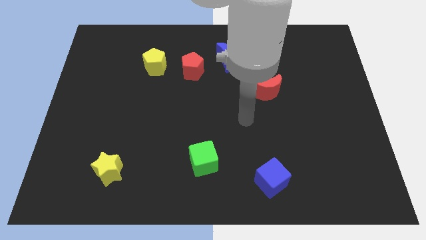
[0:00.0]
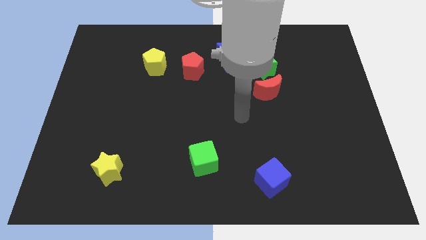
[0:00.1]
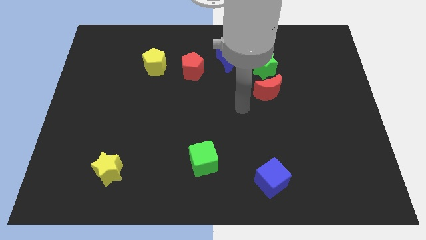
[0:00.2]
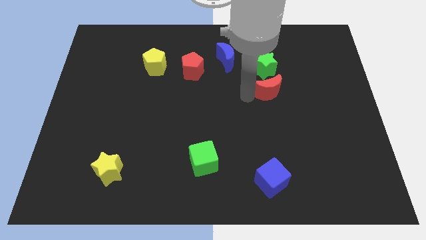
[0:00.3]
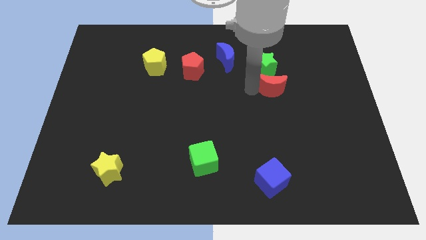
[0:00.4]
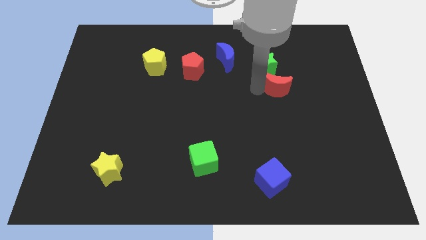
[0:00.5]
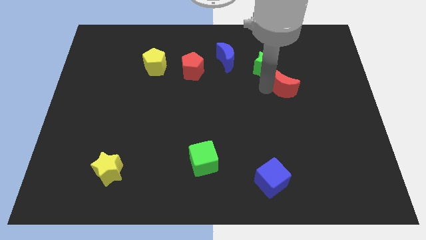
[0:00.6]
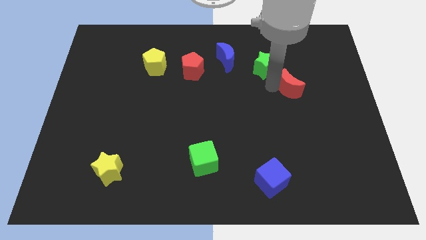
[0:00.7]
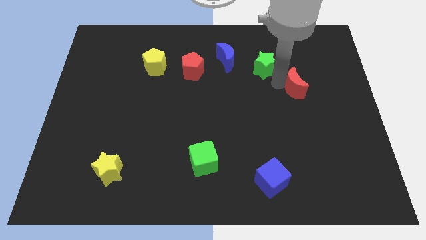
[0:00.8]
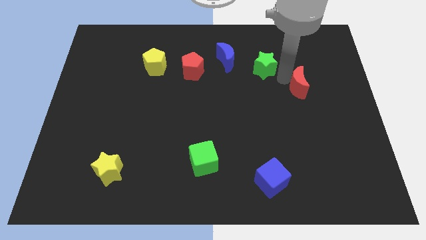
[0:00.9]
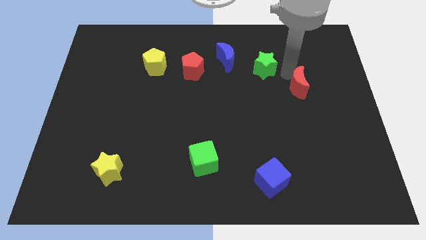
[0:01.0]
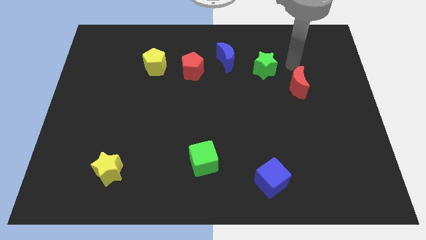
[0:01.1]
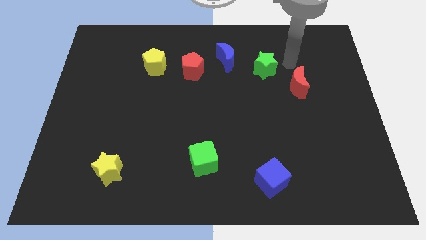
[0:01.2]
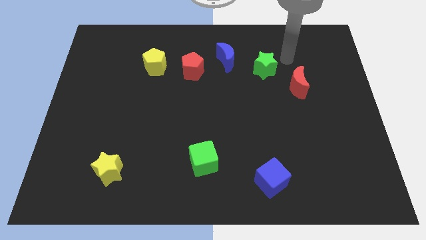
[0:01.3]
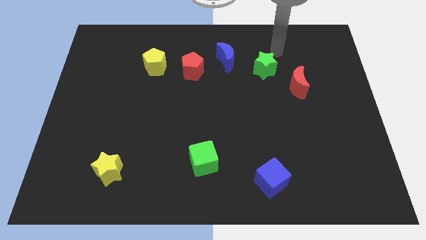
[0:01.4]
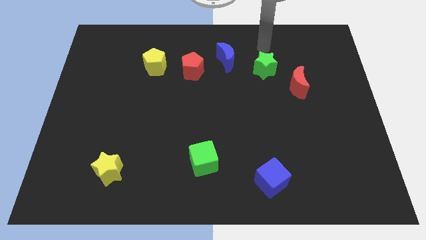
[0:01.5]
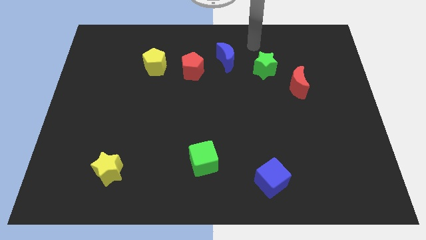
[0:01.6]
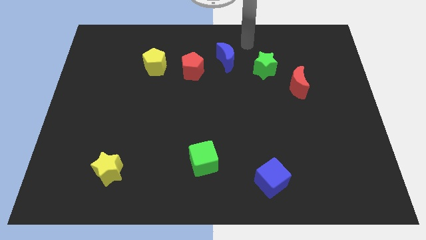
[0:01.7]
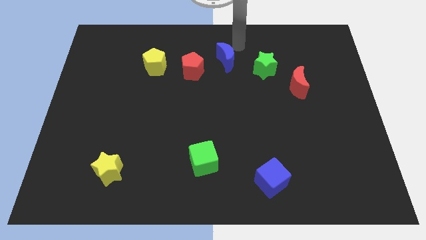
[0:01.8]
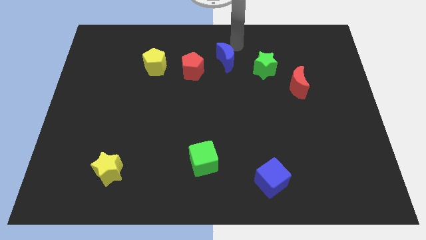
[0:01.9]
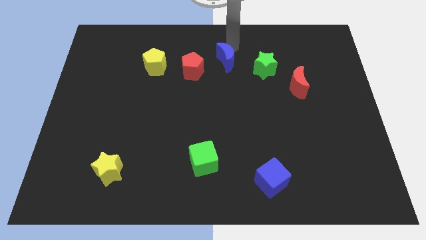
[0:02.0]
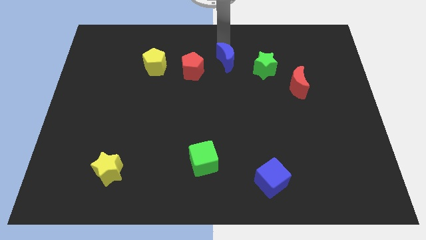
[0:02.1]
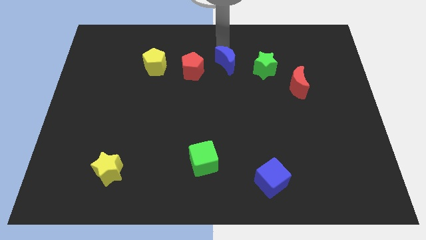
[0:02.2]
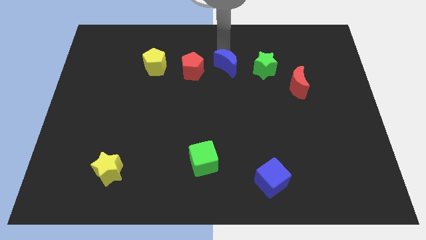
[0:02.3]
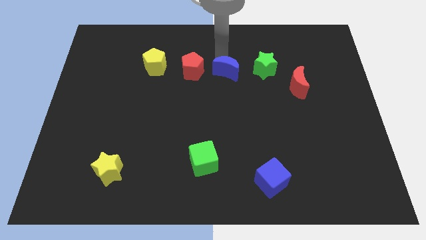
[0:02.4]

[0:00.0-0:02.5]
push blue crescent slightly down

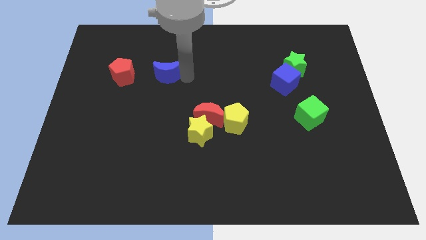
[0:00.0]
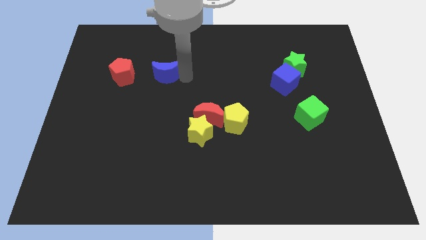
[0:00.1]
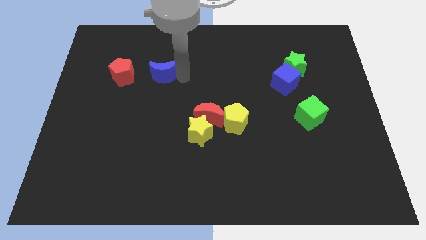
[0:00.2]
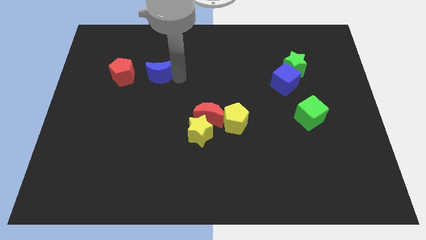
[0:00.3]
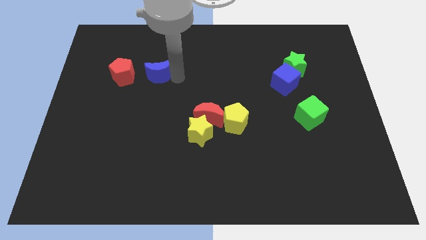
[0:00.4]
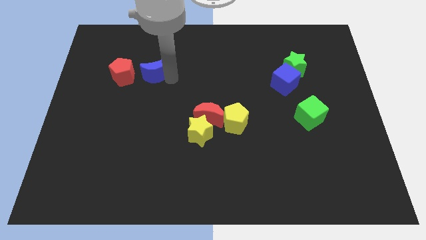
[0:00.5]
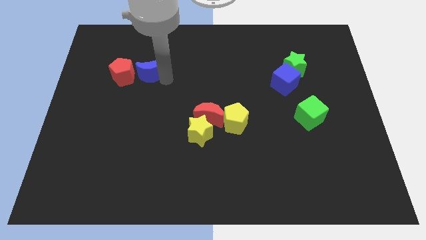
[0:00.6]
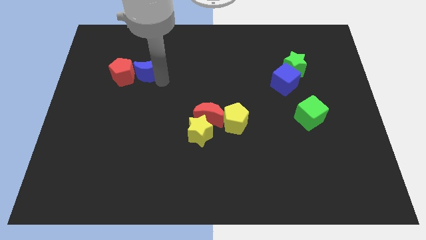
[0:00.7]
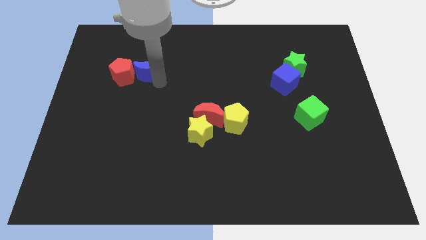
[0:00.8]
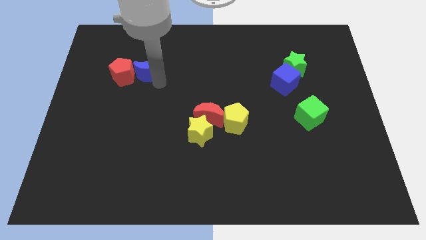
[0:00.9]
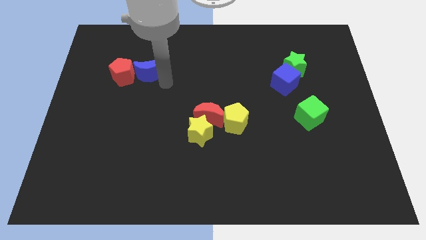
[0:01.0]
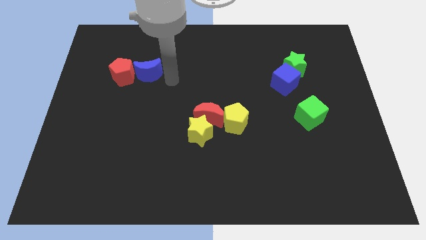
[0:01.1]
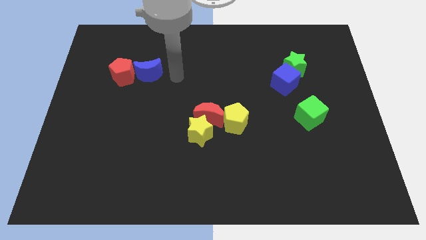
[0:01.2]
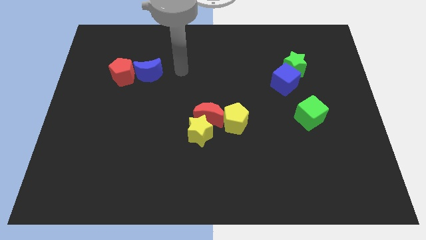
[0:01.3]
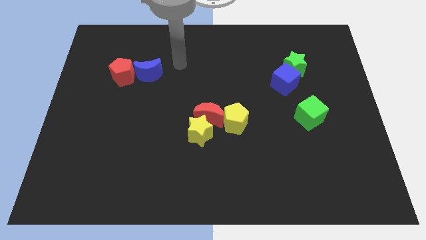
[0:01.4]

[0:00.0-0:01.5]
move the blue moon close to the red pentagon

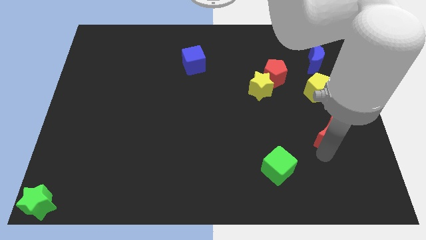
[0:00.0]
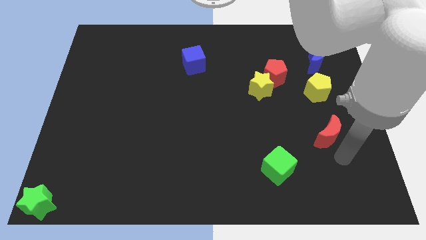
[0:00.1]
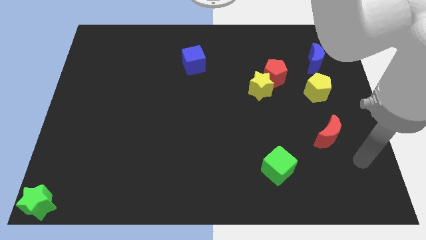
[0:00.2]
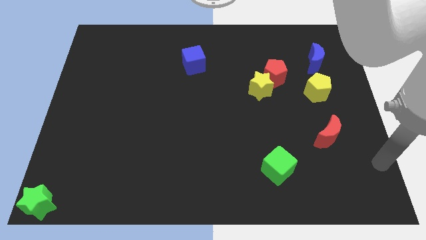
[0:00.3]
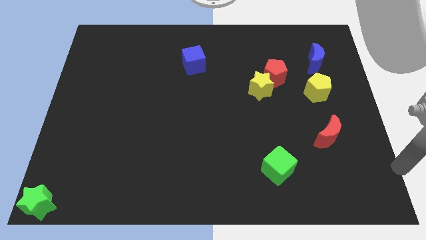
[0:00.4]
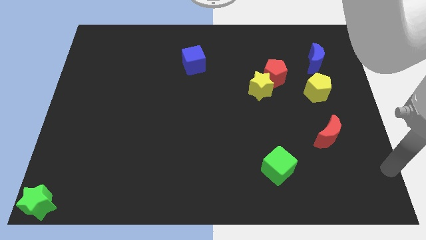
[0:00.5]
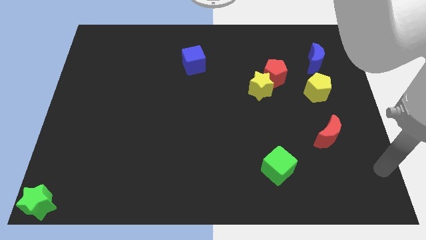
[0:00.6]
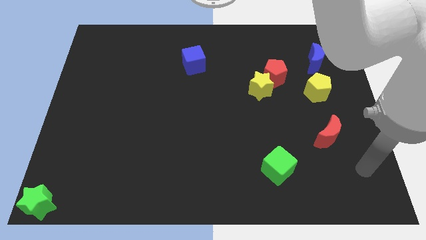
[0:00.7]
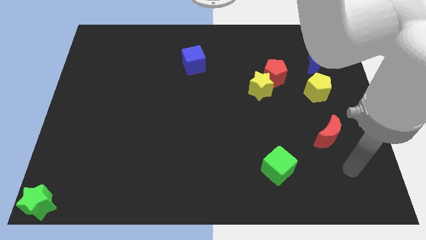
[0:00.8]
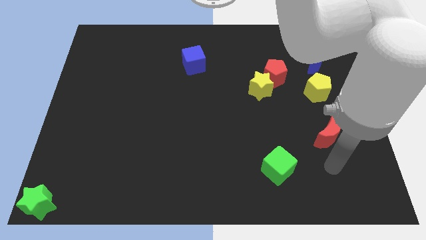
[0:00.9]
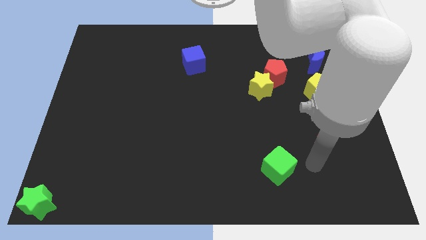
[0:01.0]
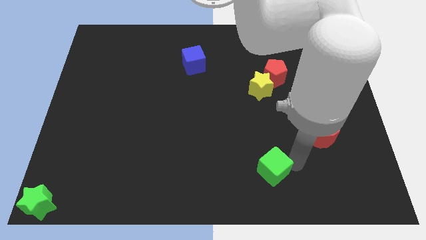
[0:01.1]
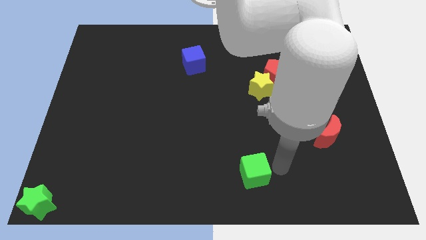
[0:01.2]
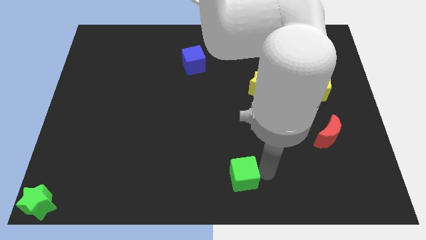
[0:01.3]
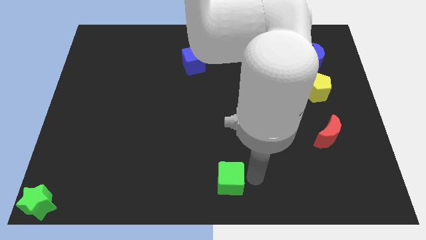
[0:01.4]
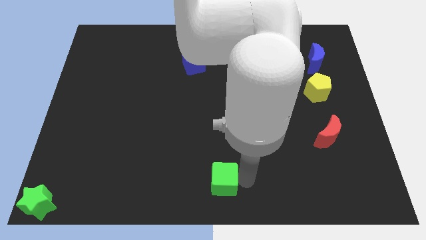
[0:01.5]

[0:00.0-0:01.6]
slide the green cube towards the left

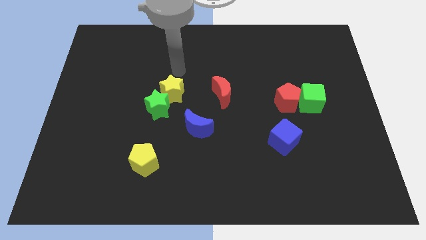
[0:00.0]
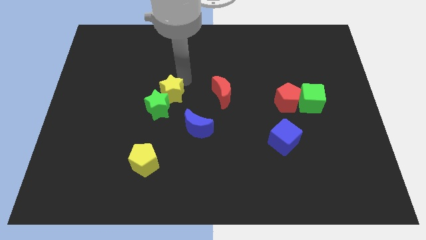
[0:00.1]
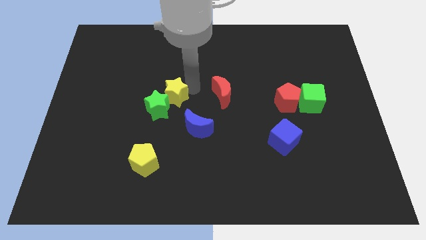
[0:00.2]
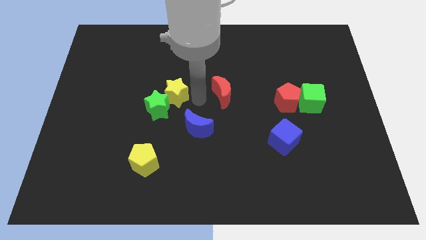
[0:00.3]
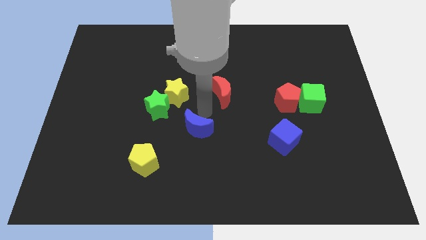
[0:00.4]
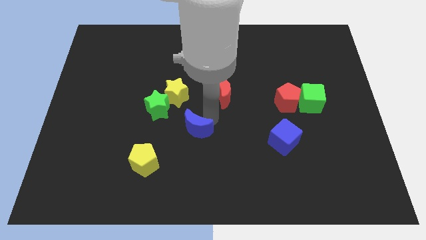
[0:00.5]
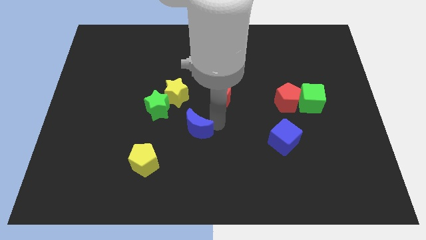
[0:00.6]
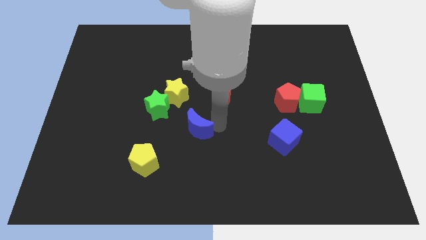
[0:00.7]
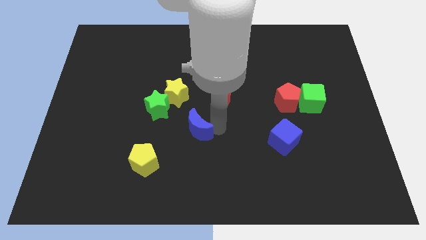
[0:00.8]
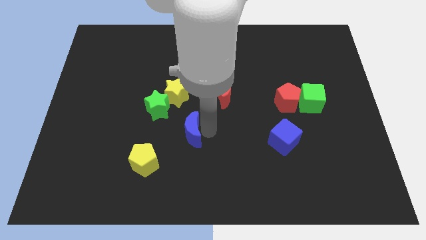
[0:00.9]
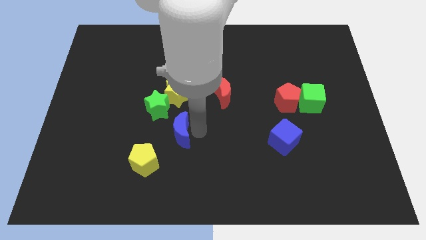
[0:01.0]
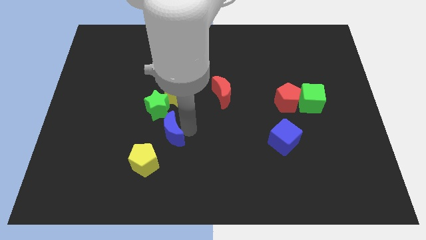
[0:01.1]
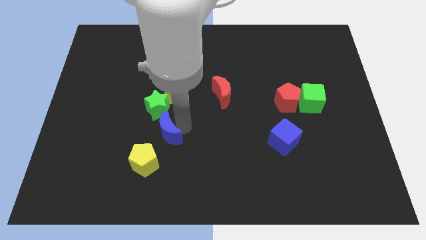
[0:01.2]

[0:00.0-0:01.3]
slide the blue moon below yellow star

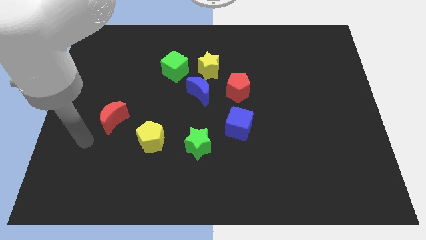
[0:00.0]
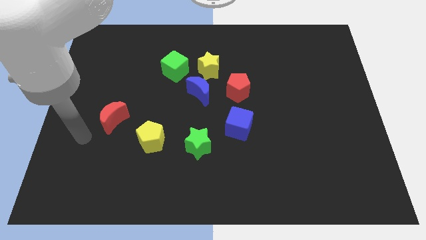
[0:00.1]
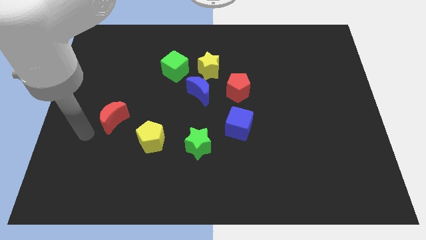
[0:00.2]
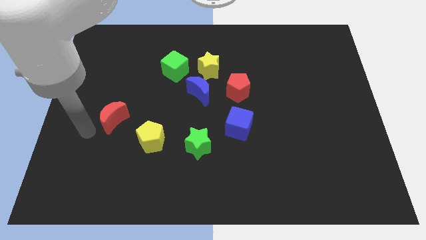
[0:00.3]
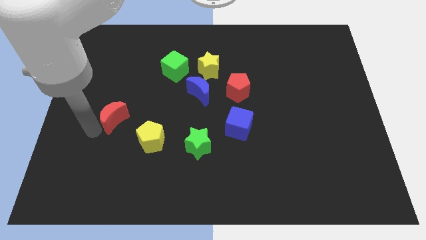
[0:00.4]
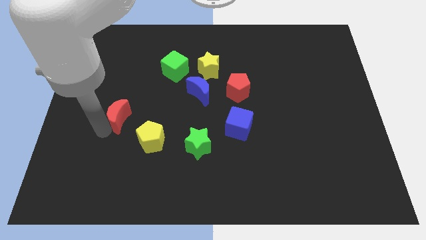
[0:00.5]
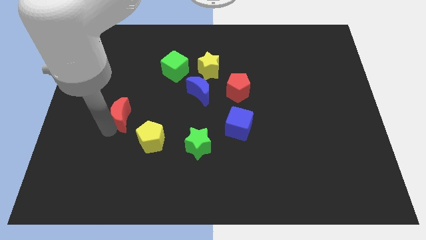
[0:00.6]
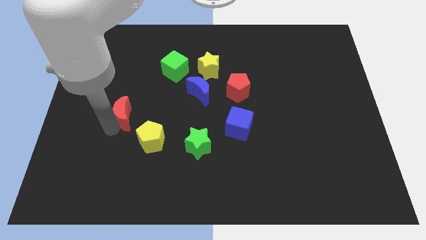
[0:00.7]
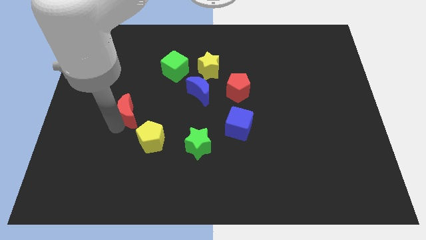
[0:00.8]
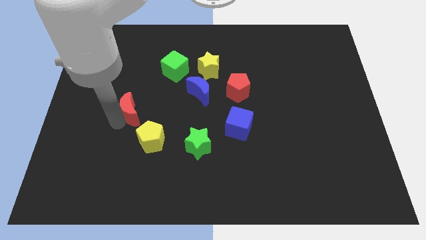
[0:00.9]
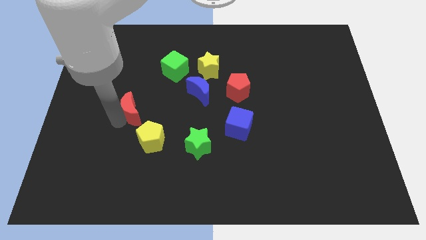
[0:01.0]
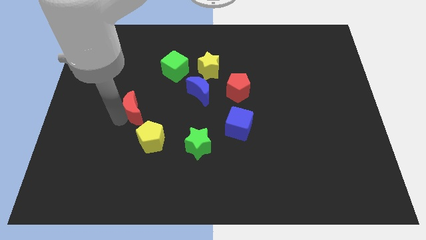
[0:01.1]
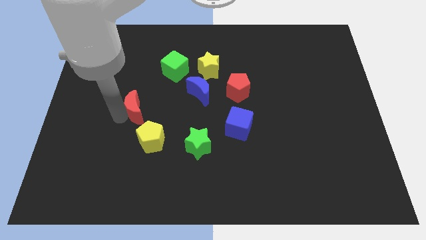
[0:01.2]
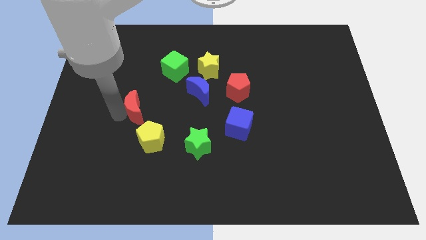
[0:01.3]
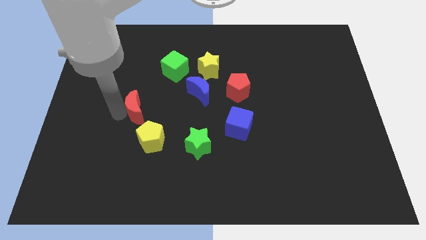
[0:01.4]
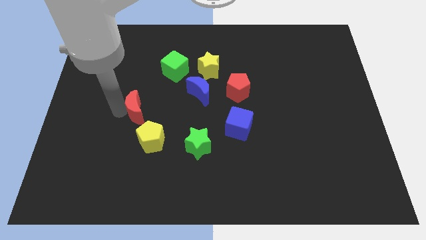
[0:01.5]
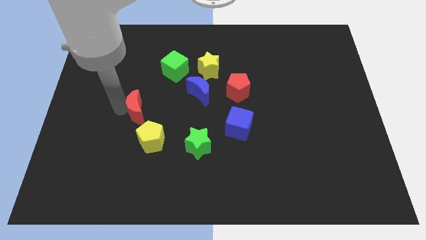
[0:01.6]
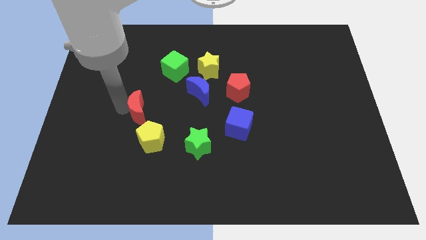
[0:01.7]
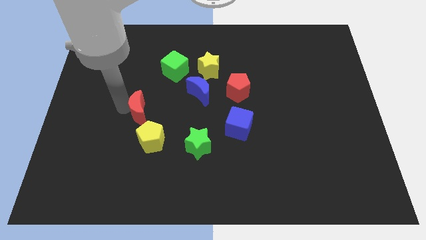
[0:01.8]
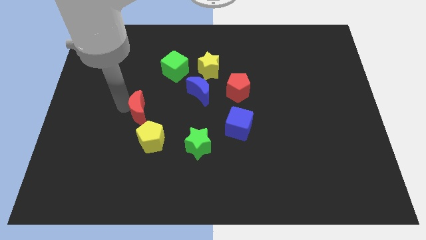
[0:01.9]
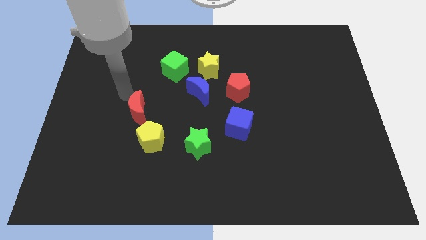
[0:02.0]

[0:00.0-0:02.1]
move the red crescent above the yellow pentagon
